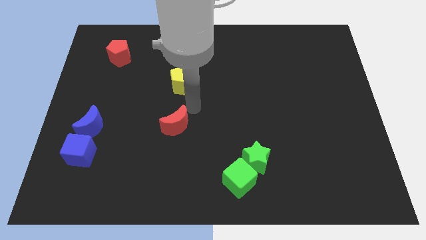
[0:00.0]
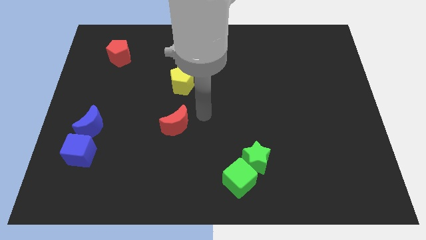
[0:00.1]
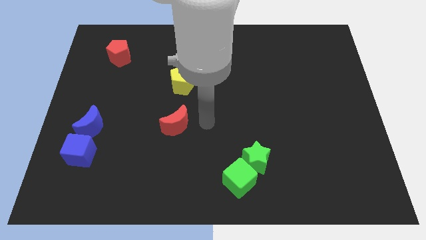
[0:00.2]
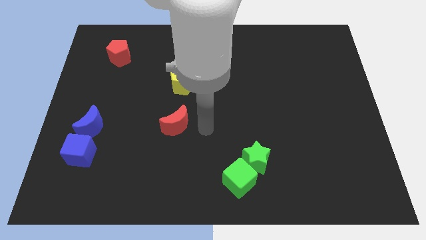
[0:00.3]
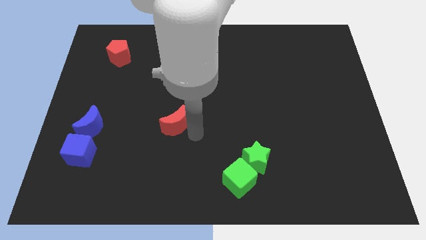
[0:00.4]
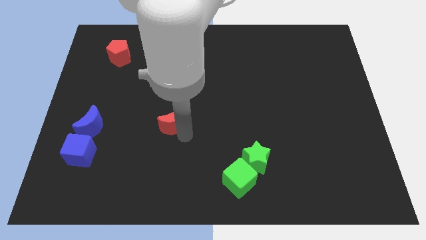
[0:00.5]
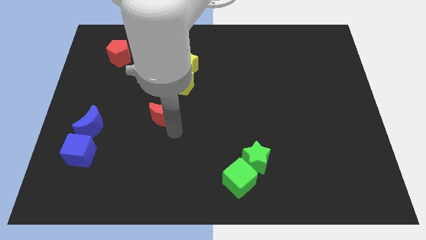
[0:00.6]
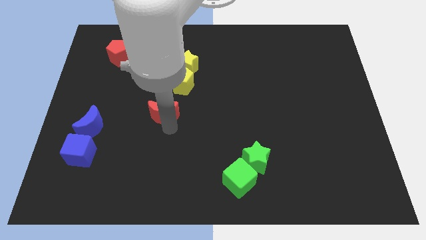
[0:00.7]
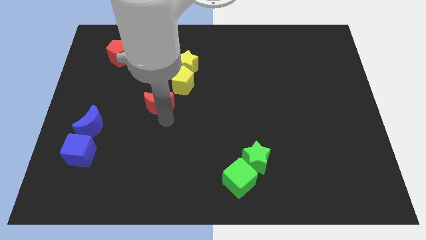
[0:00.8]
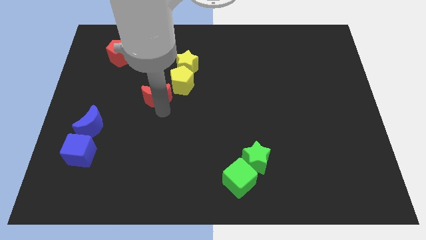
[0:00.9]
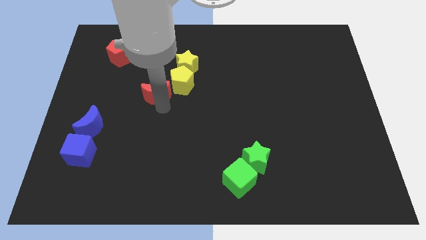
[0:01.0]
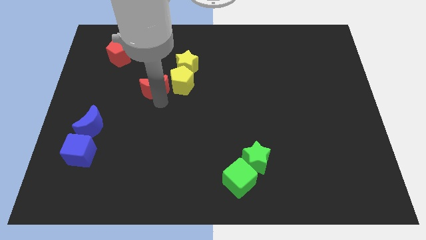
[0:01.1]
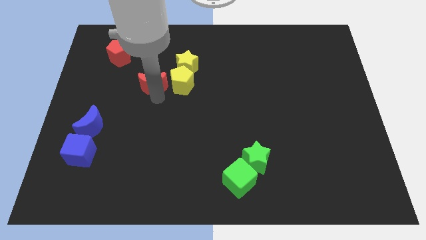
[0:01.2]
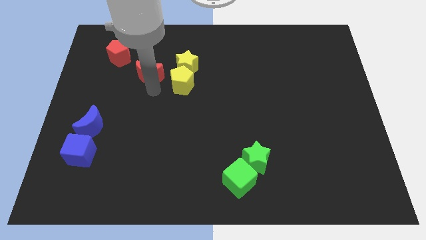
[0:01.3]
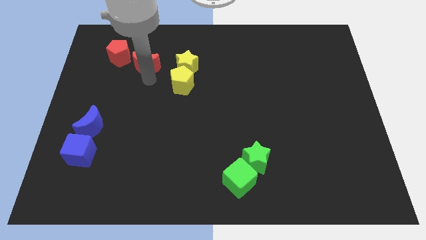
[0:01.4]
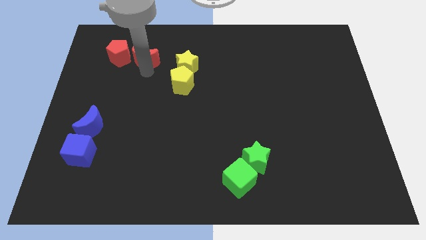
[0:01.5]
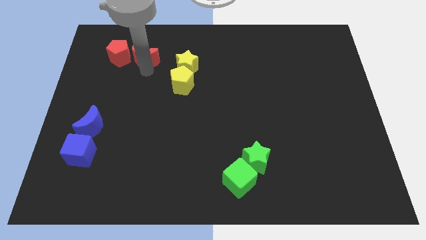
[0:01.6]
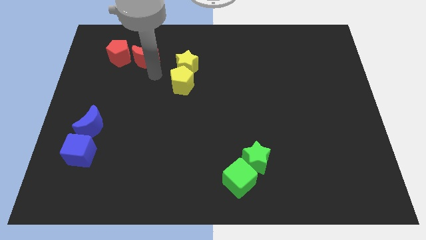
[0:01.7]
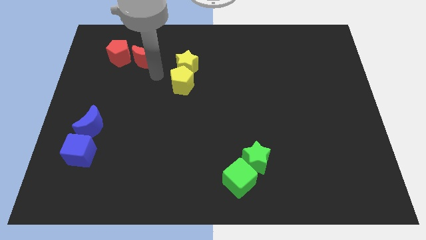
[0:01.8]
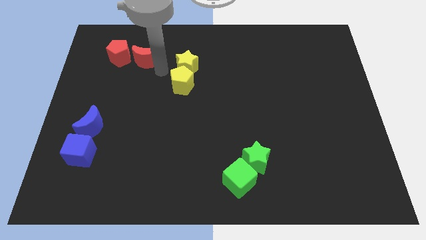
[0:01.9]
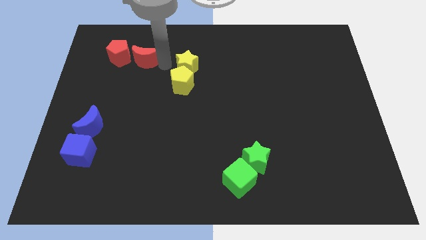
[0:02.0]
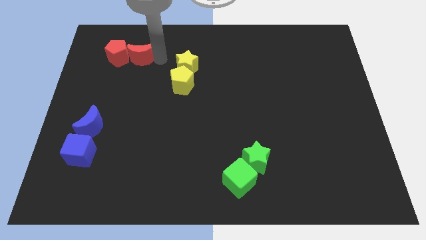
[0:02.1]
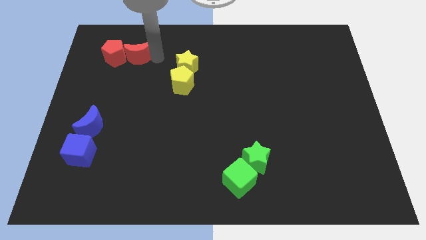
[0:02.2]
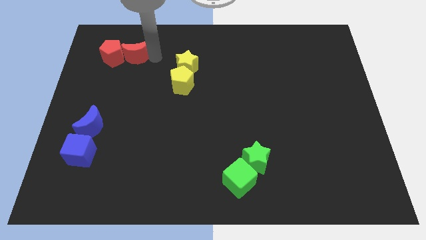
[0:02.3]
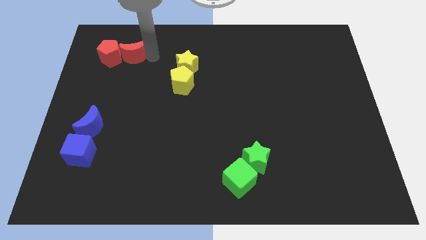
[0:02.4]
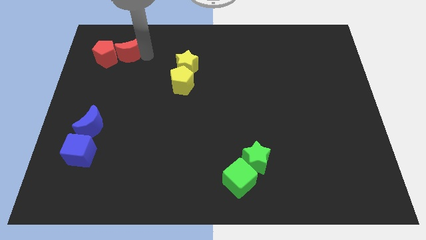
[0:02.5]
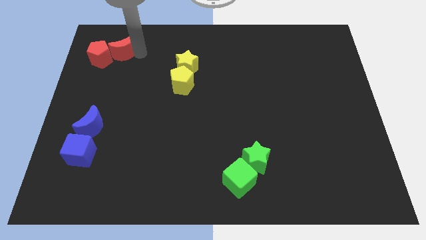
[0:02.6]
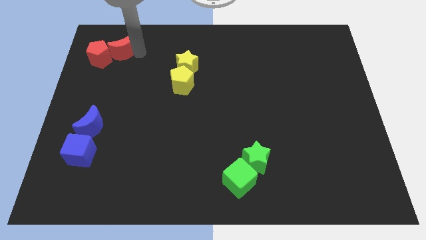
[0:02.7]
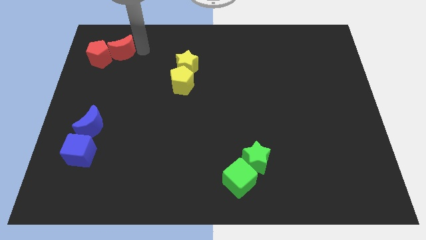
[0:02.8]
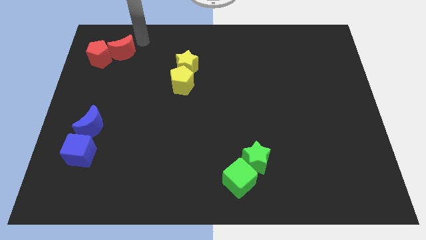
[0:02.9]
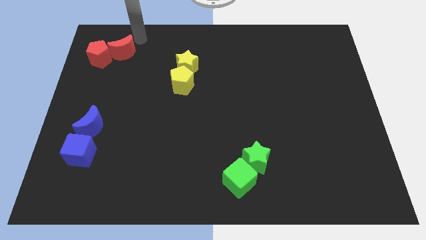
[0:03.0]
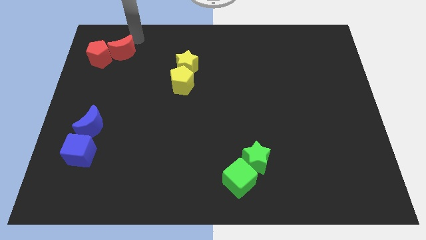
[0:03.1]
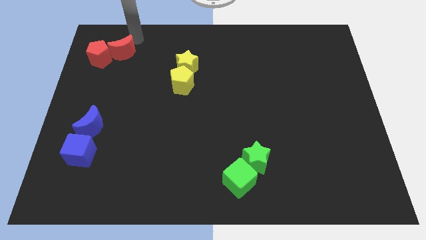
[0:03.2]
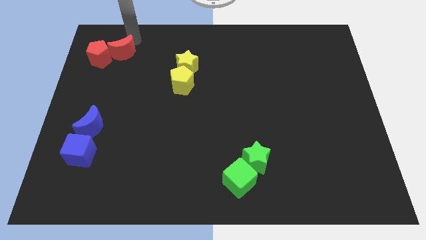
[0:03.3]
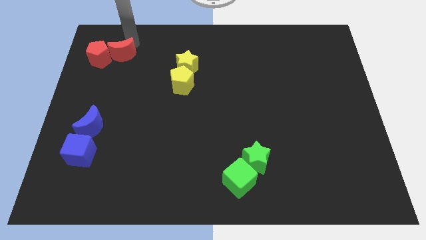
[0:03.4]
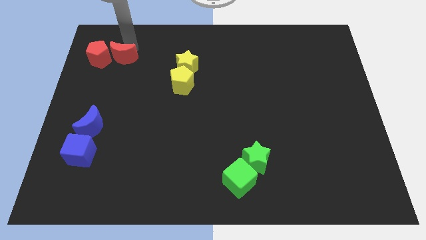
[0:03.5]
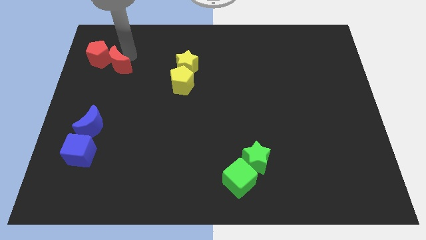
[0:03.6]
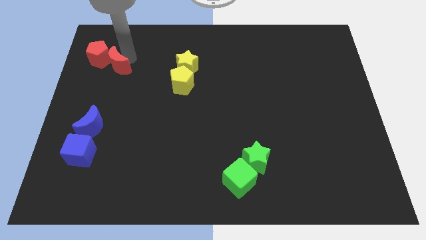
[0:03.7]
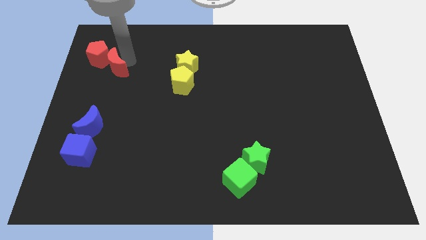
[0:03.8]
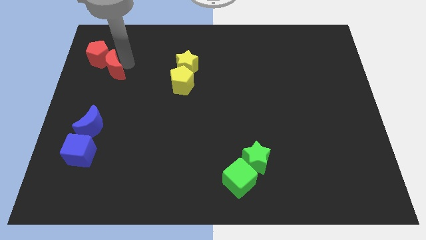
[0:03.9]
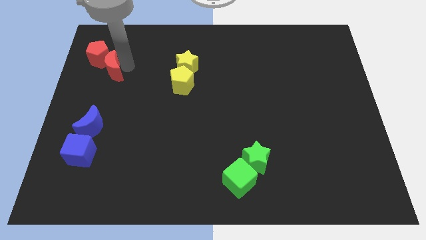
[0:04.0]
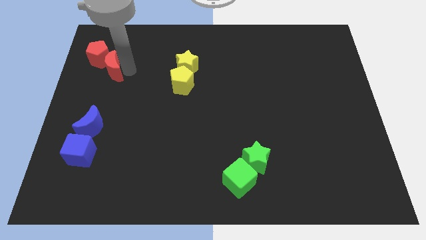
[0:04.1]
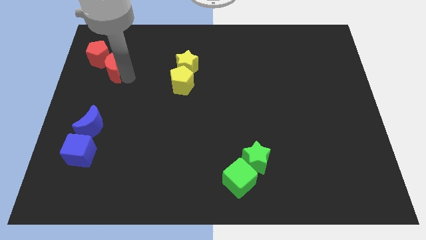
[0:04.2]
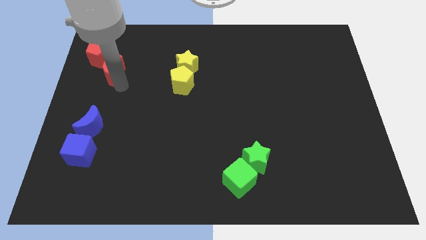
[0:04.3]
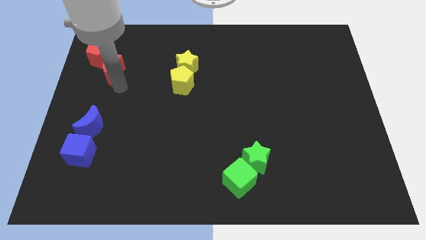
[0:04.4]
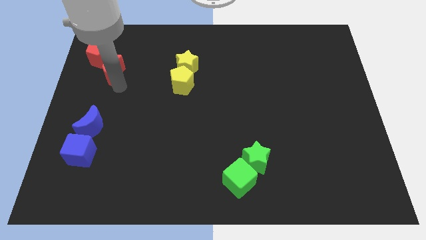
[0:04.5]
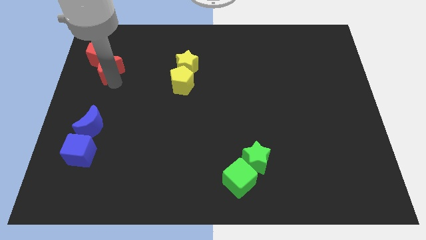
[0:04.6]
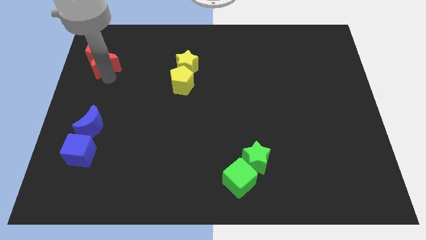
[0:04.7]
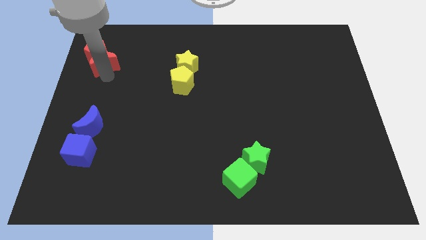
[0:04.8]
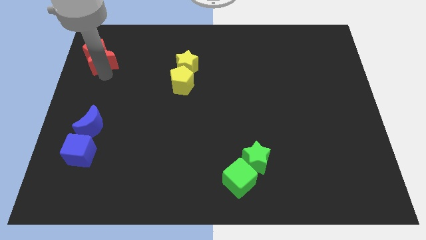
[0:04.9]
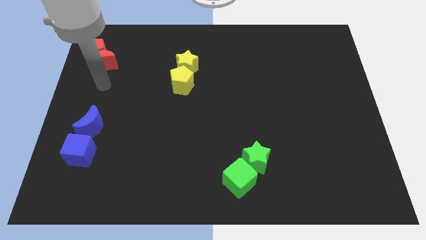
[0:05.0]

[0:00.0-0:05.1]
place both the red blocks together at the top left side of the board

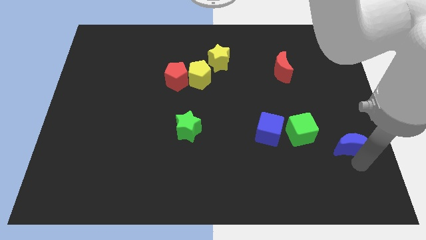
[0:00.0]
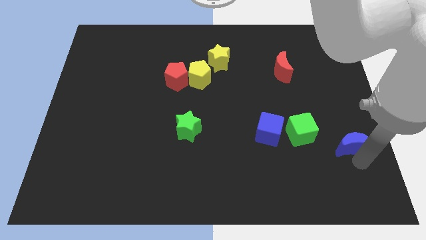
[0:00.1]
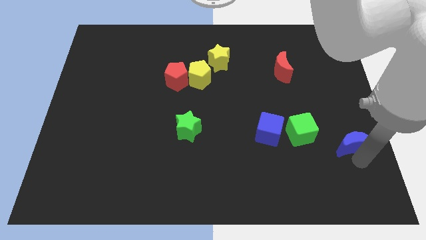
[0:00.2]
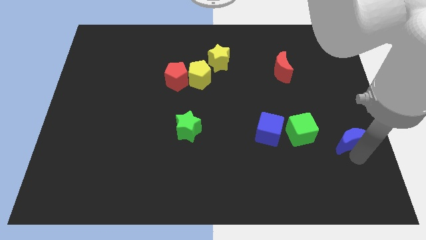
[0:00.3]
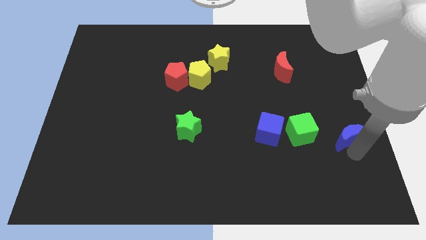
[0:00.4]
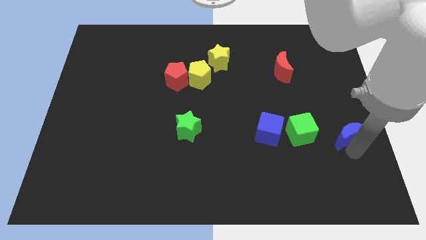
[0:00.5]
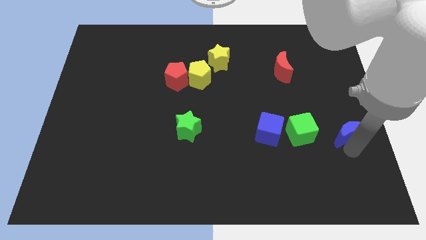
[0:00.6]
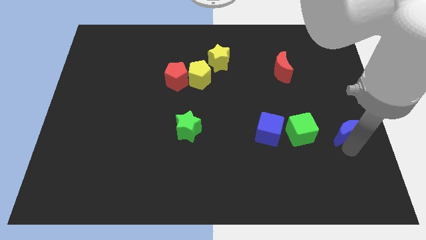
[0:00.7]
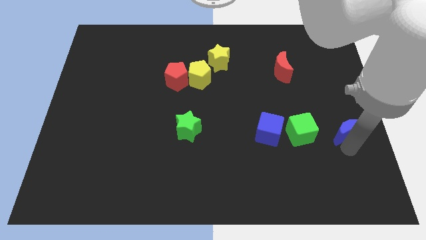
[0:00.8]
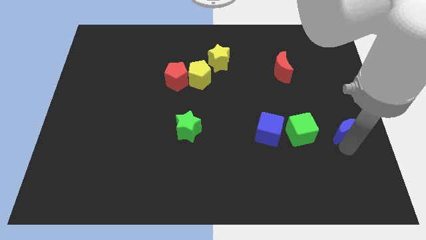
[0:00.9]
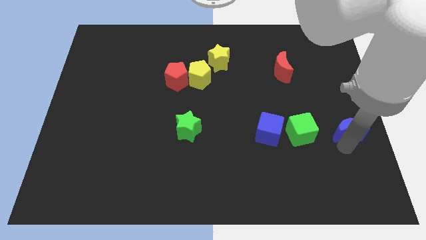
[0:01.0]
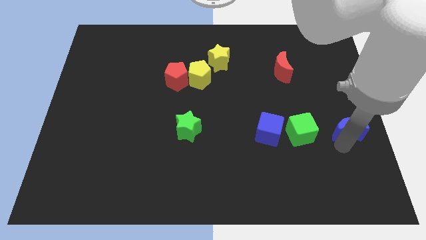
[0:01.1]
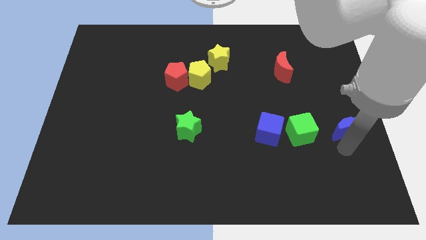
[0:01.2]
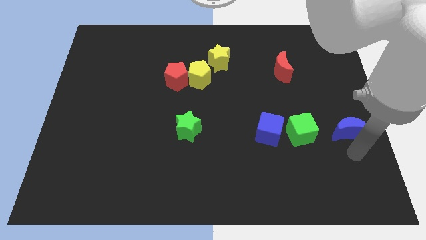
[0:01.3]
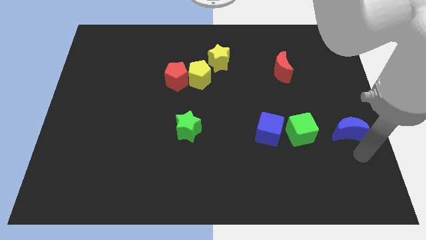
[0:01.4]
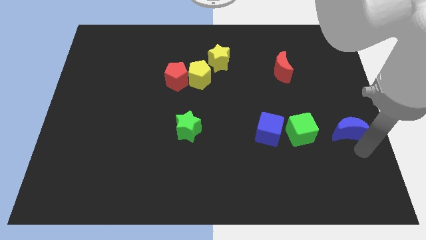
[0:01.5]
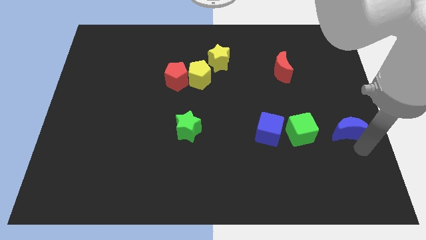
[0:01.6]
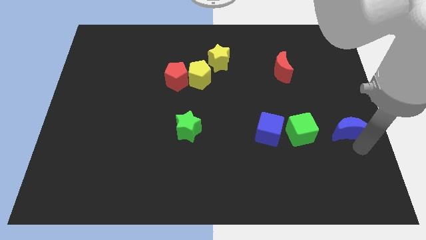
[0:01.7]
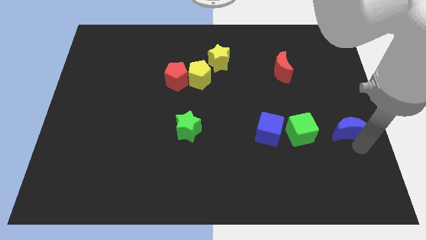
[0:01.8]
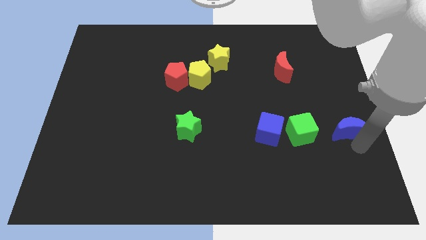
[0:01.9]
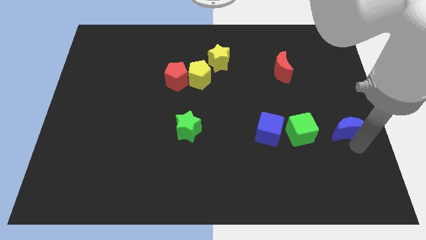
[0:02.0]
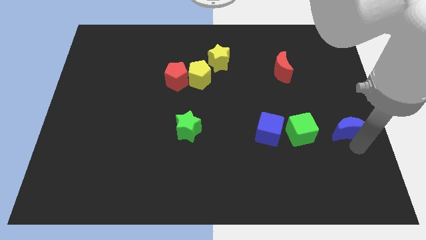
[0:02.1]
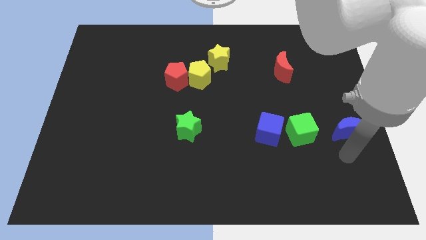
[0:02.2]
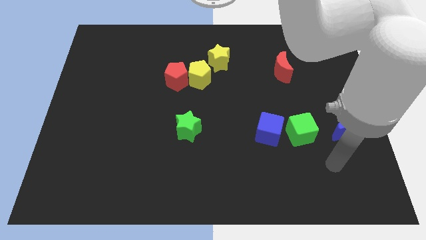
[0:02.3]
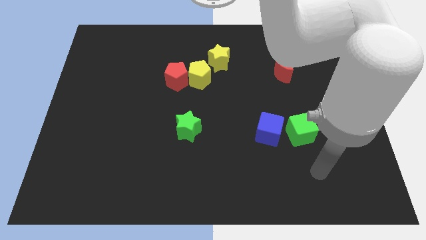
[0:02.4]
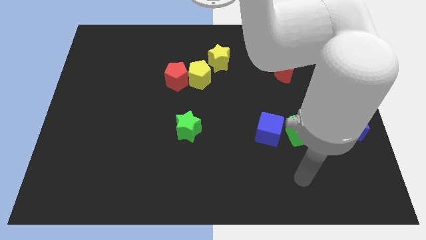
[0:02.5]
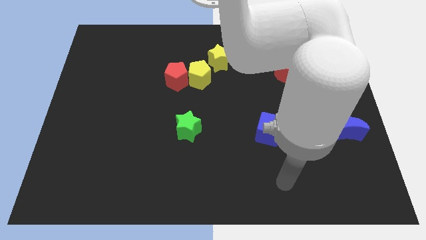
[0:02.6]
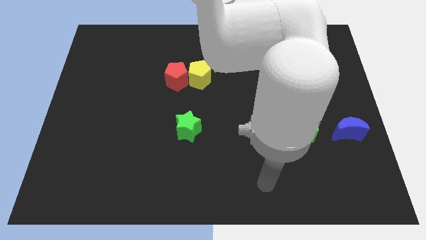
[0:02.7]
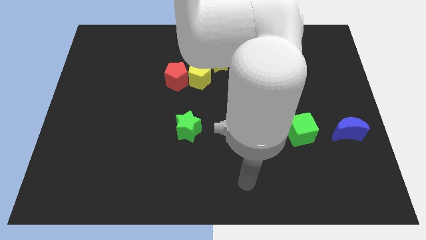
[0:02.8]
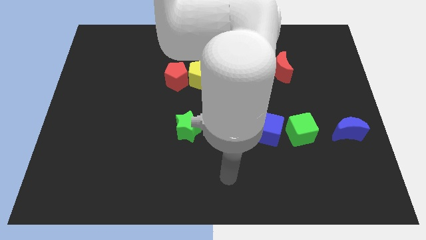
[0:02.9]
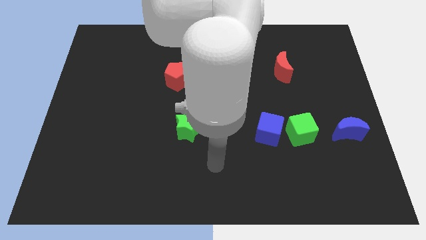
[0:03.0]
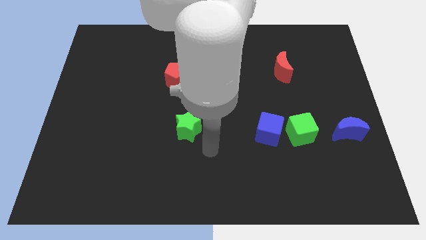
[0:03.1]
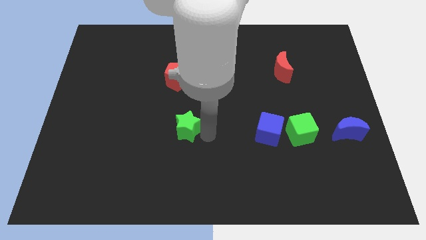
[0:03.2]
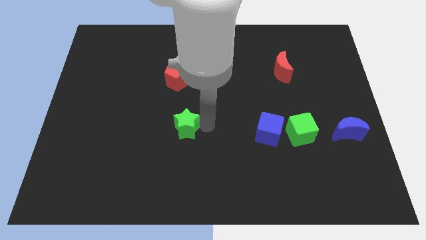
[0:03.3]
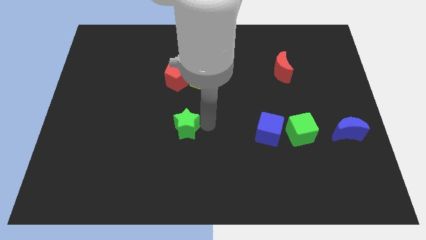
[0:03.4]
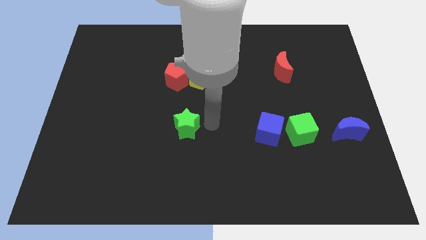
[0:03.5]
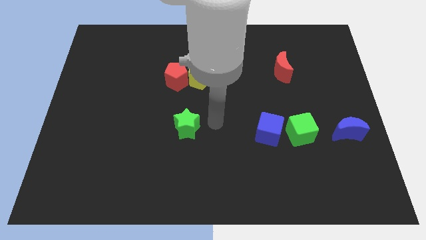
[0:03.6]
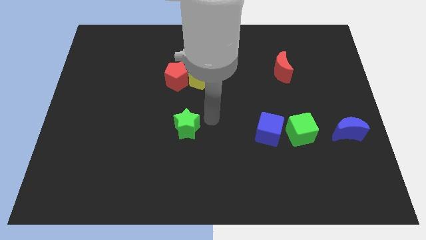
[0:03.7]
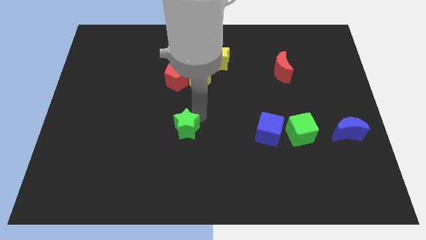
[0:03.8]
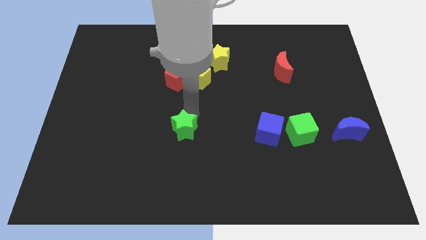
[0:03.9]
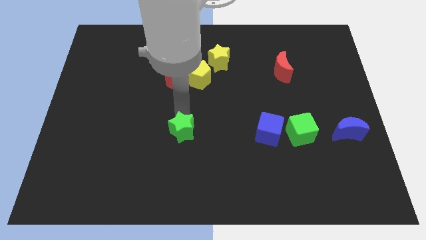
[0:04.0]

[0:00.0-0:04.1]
place the blue moon to the right of the green cube
